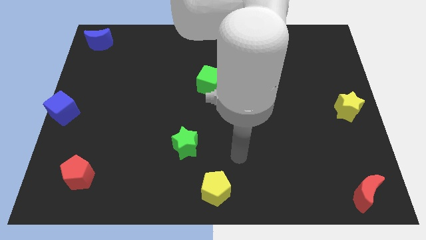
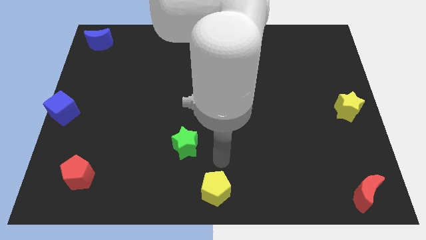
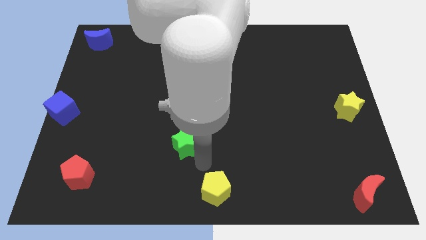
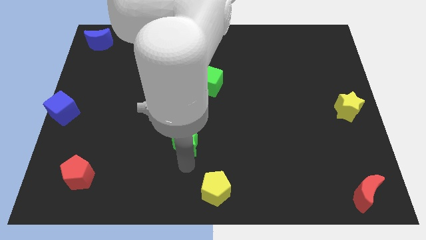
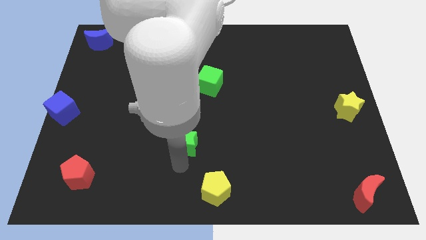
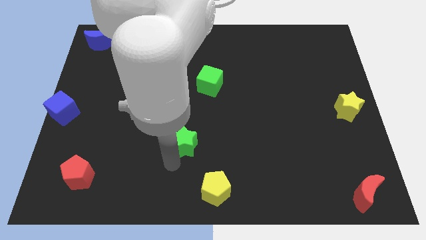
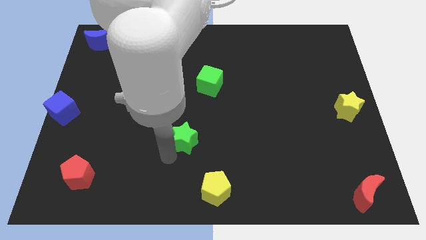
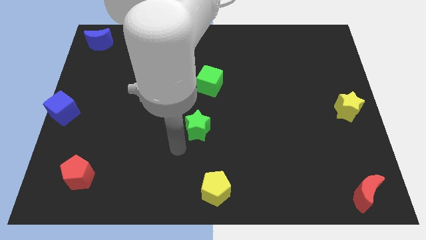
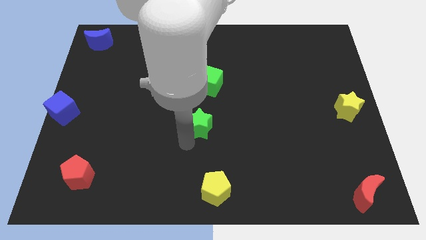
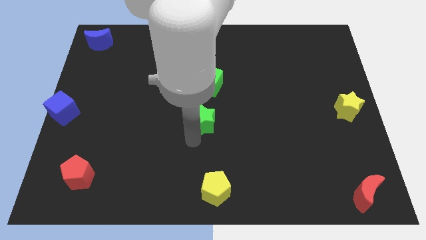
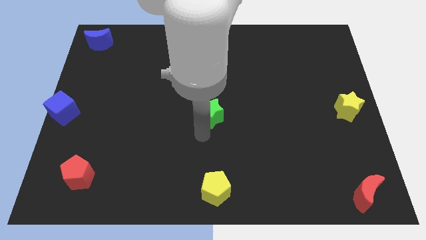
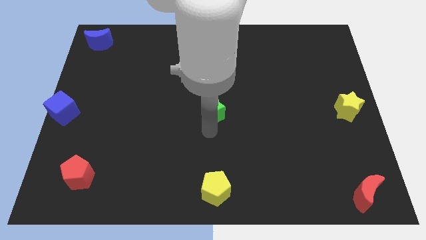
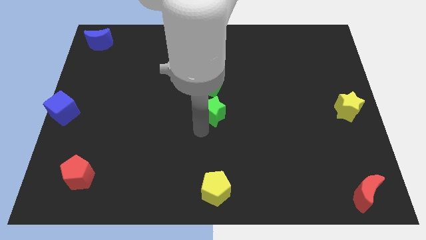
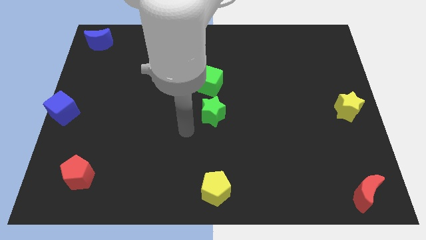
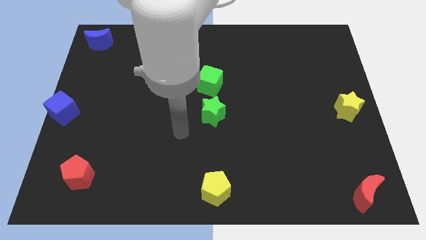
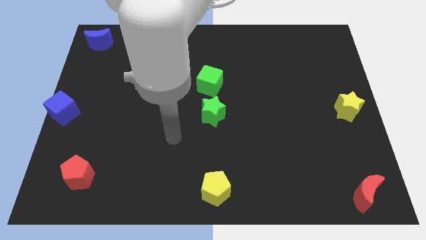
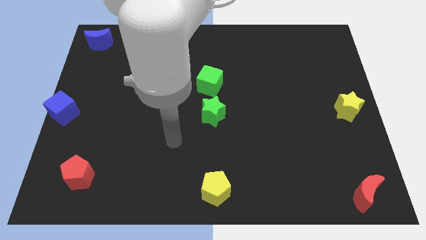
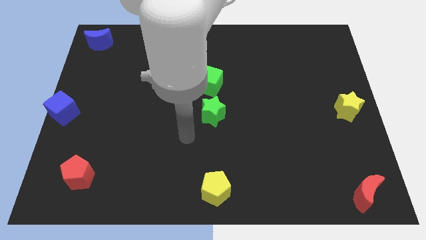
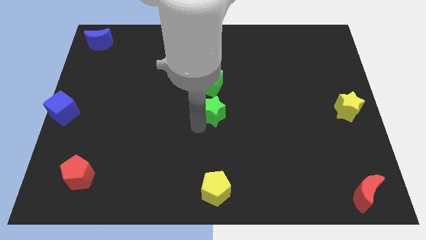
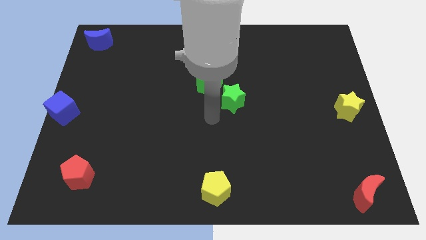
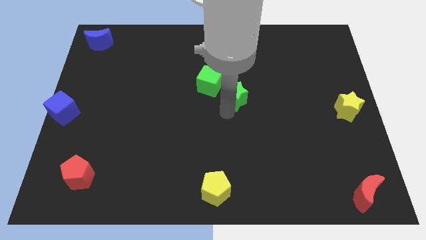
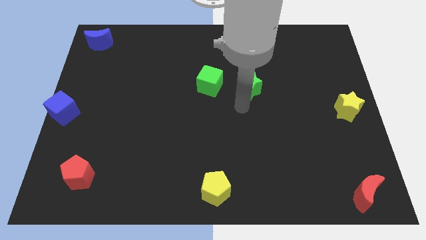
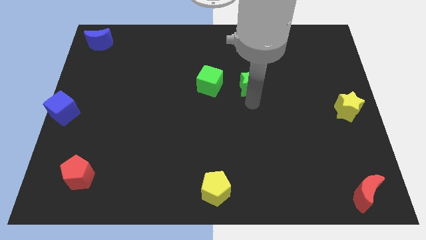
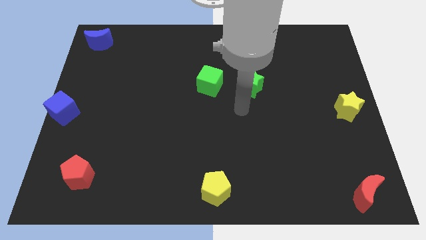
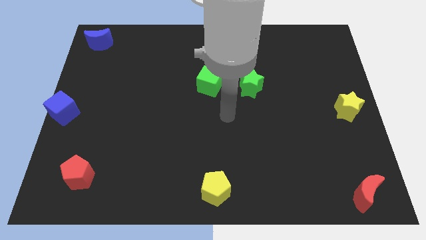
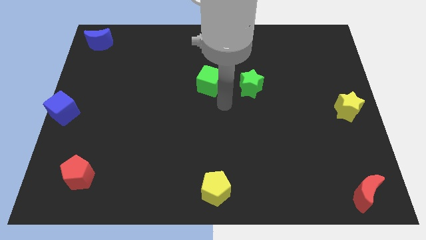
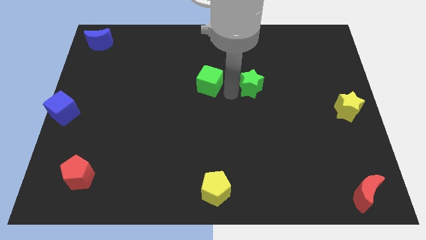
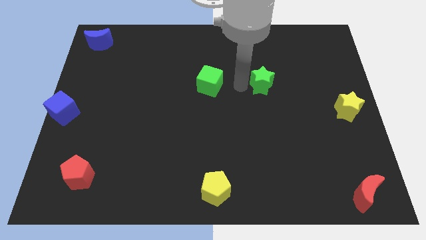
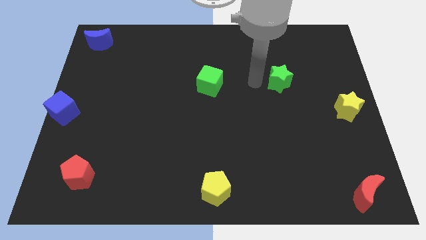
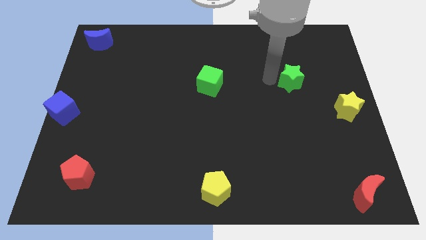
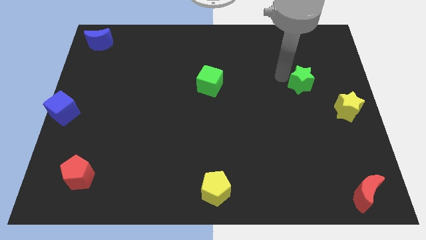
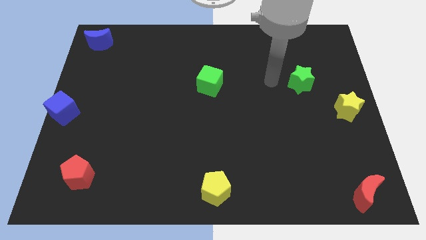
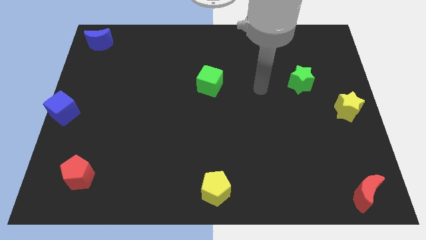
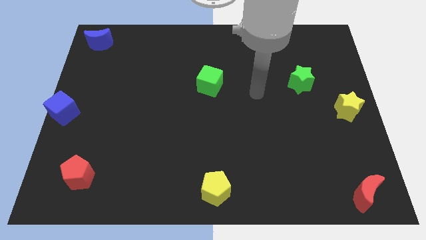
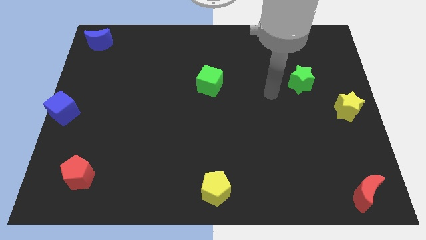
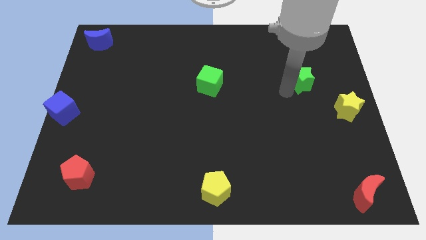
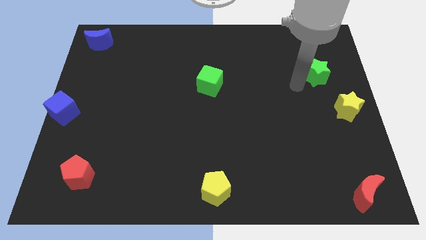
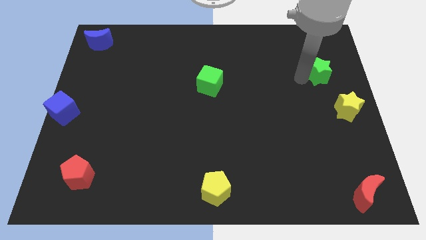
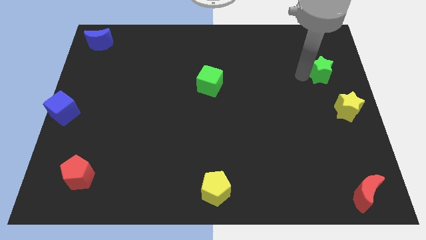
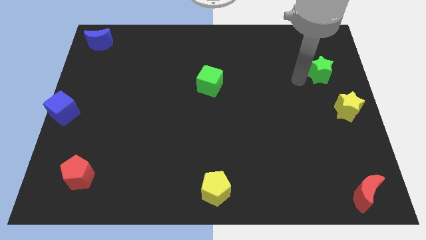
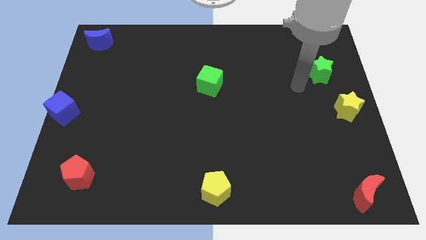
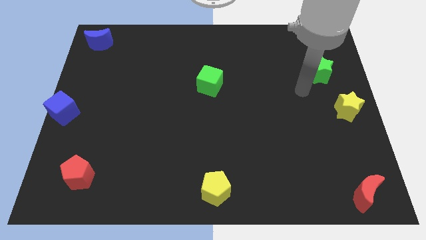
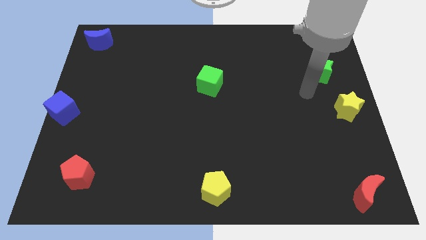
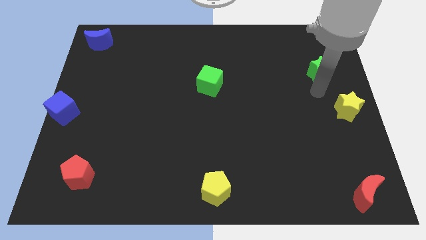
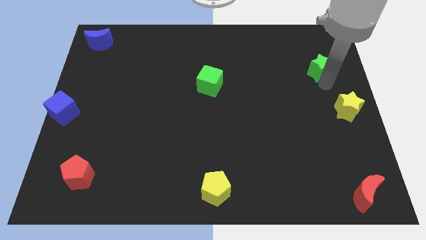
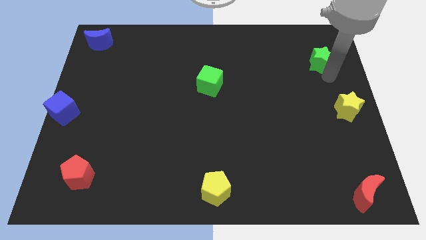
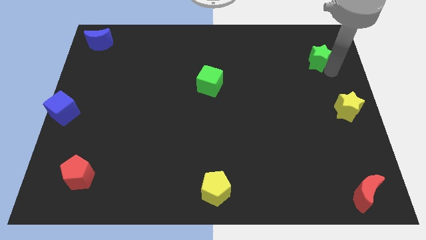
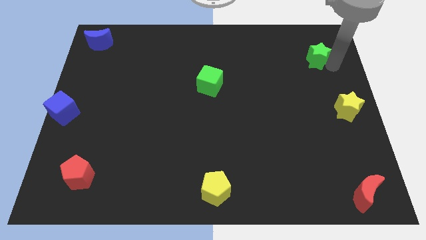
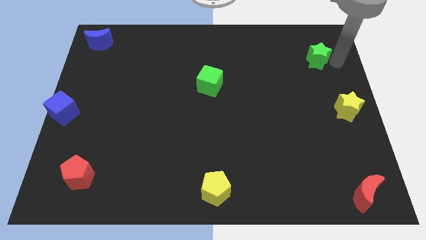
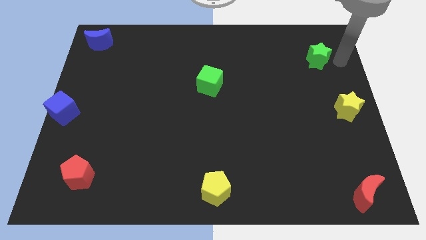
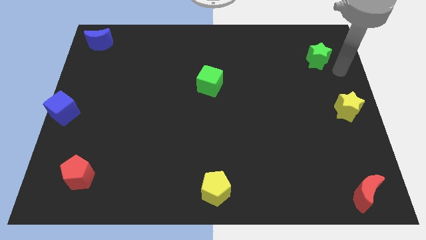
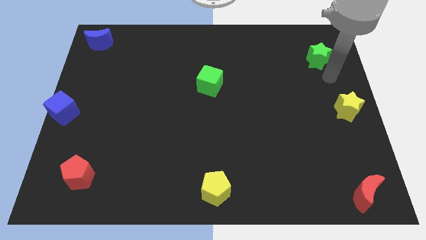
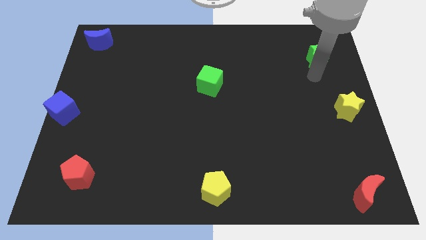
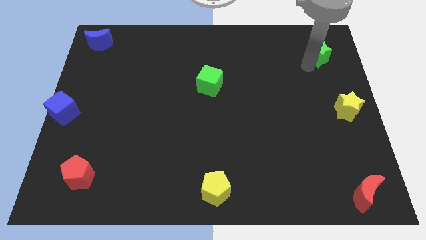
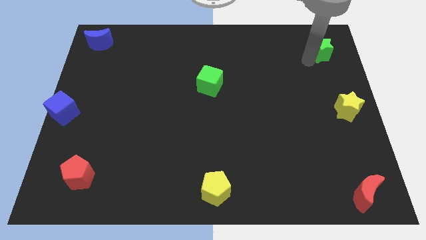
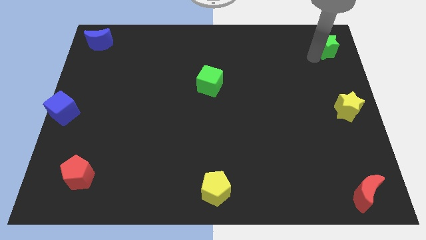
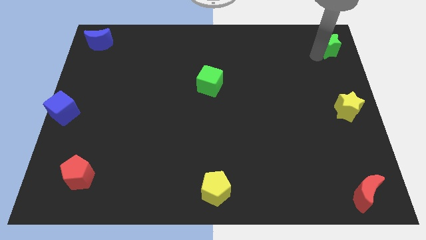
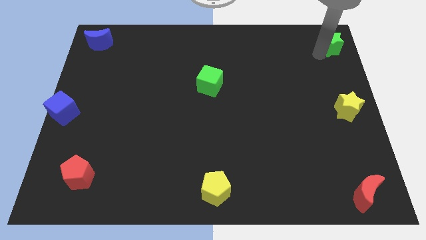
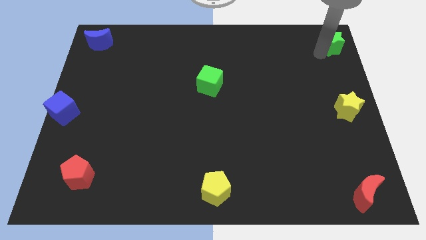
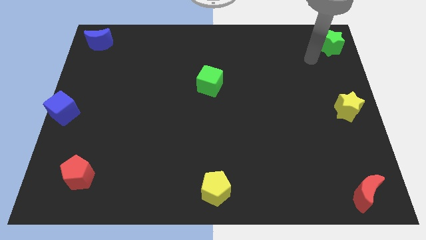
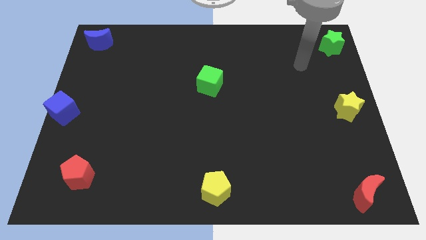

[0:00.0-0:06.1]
slide green star to the top right

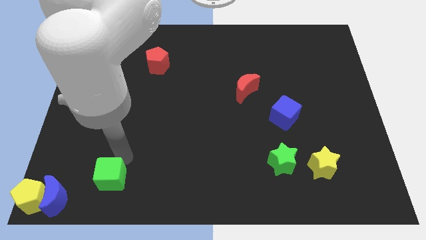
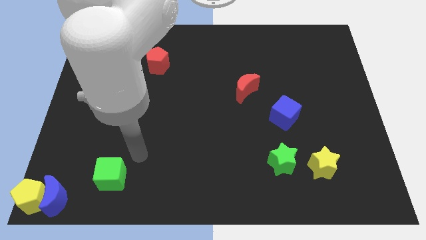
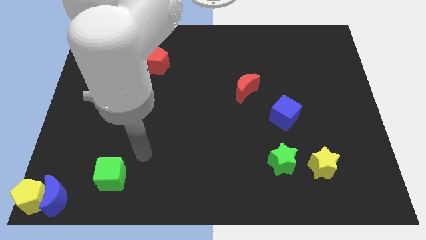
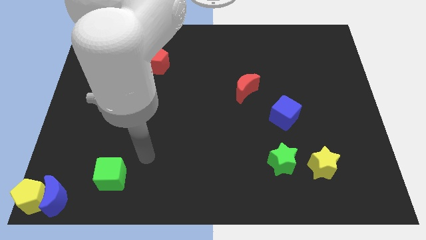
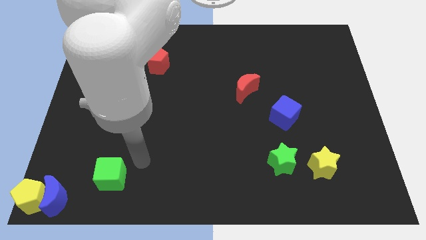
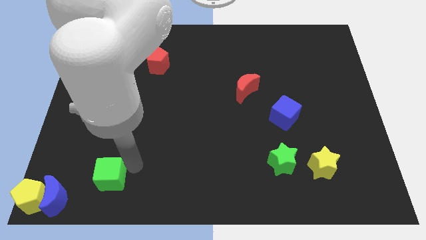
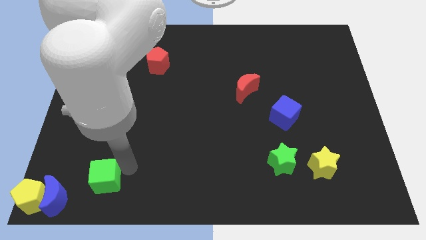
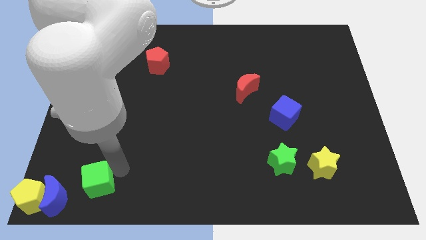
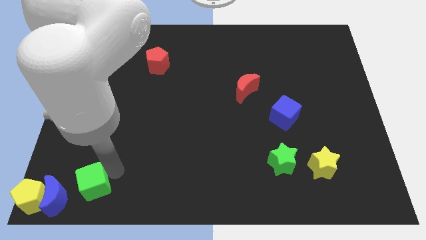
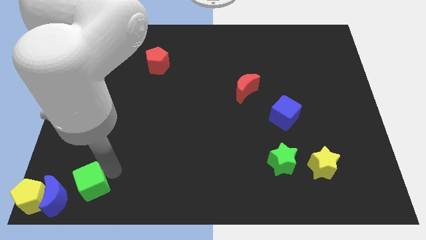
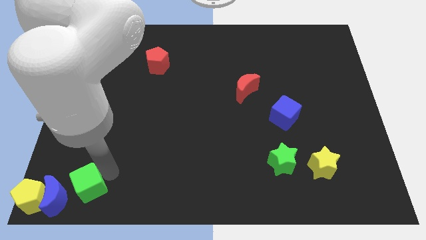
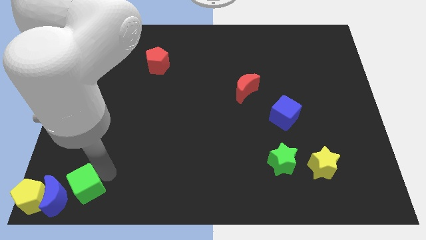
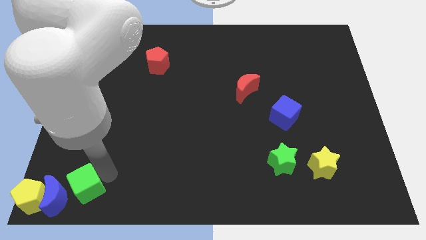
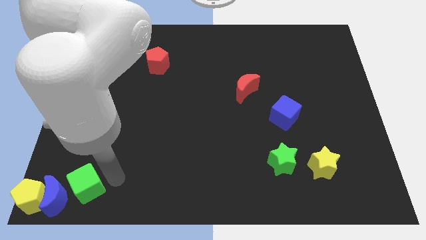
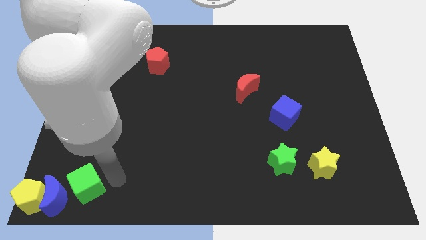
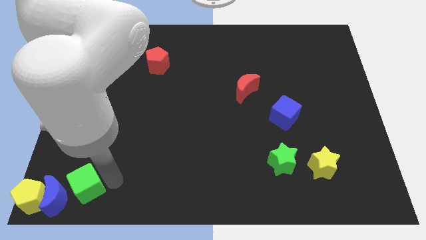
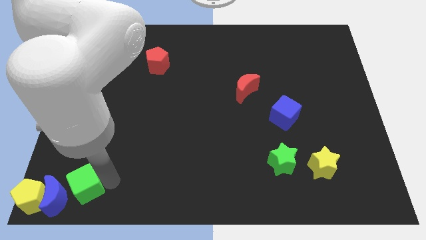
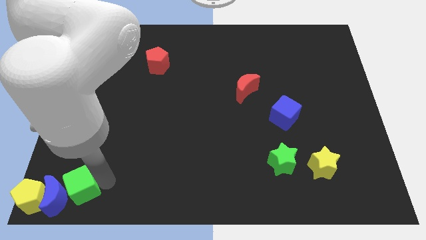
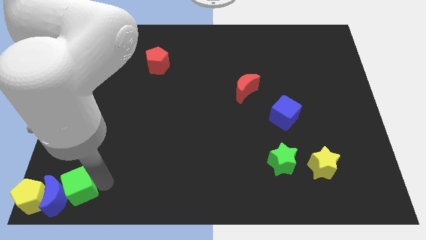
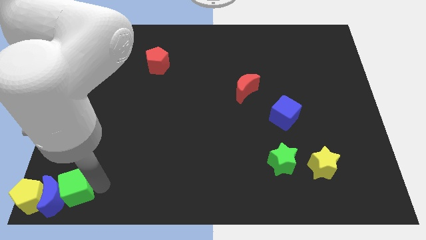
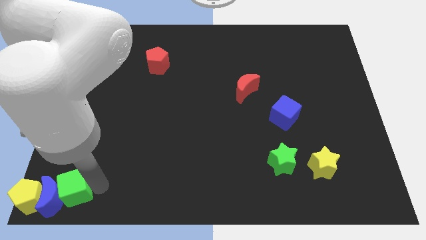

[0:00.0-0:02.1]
move green cube into blue moon

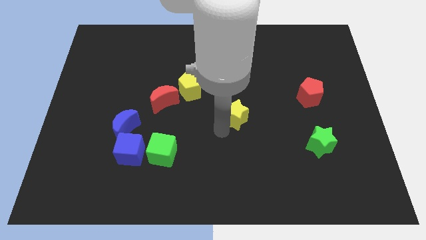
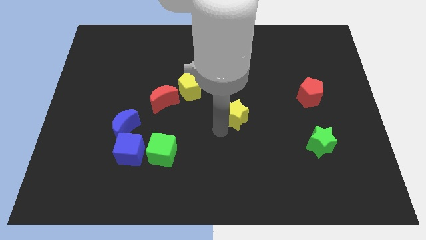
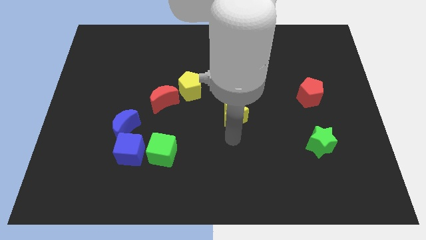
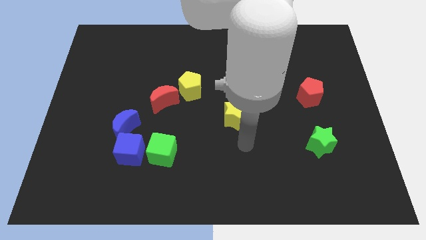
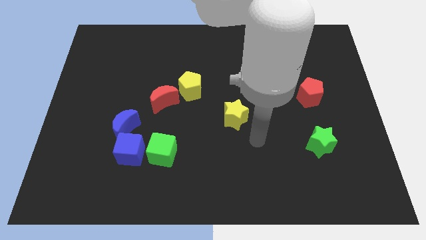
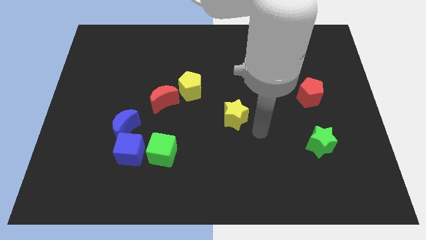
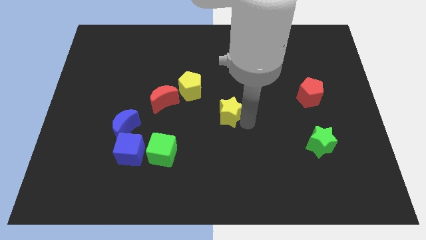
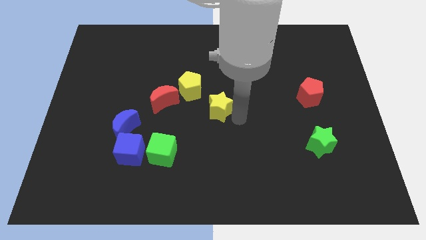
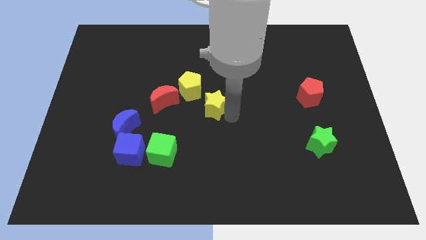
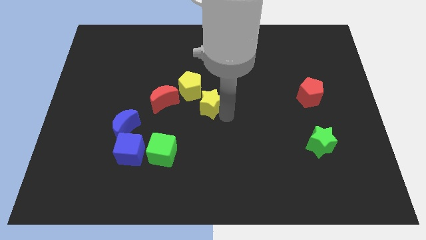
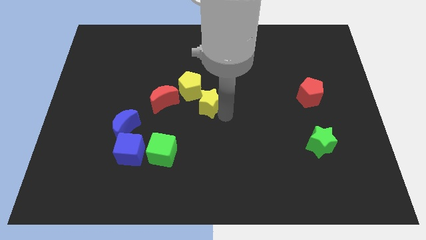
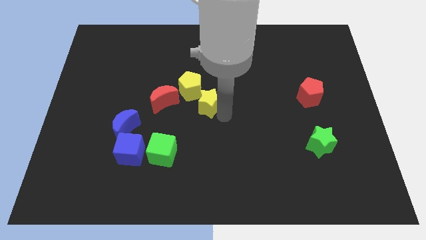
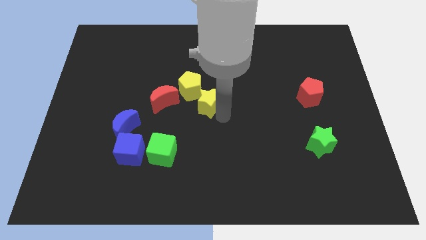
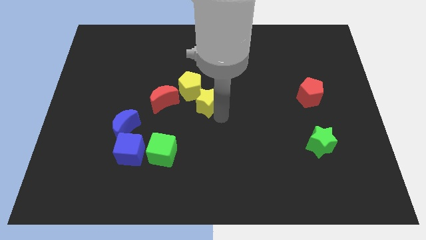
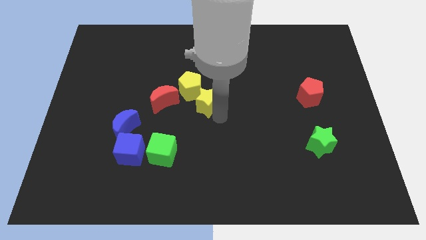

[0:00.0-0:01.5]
move the yellow star close to the yellow pentagon
